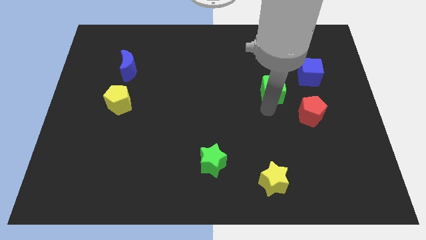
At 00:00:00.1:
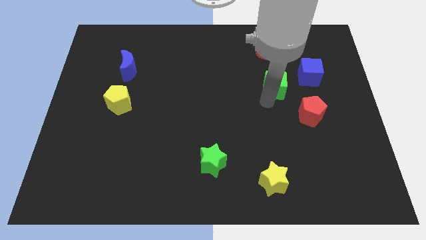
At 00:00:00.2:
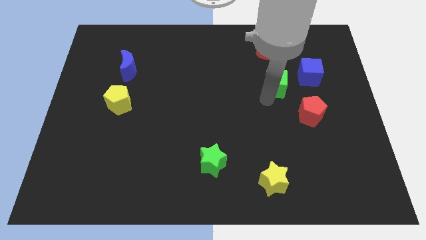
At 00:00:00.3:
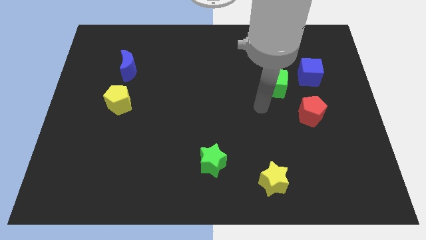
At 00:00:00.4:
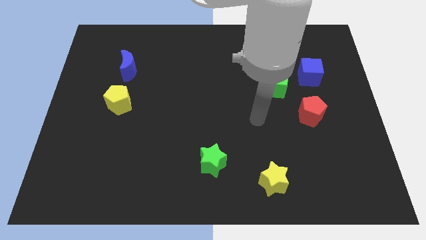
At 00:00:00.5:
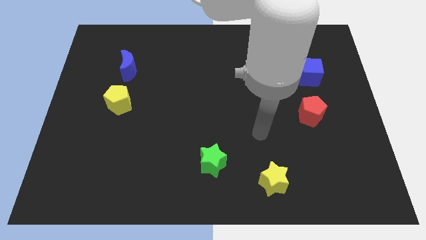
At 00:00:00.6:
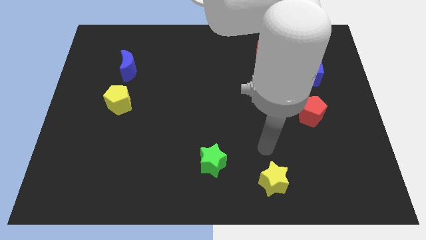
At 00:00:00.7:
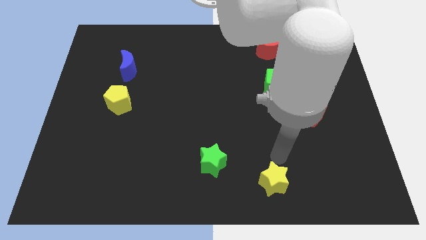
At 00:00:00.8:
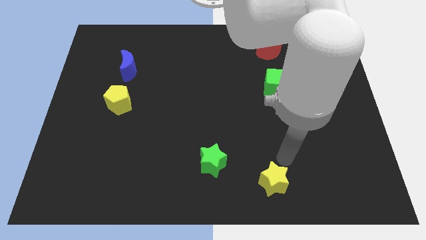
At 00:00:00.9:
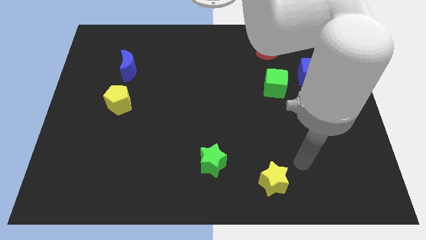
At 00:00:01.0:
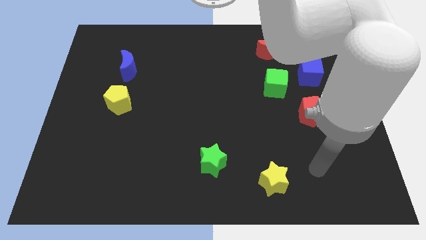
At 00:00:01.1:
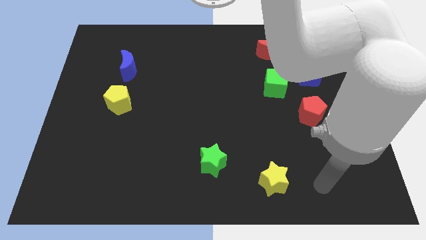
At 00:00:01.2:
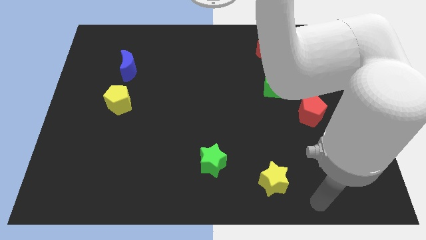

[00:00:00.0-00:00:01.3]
place the green cube to the left side of blue cube

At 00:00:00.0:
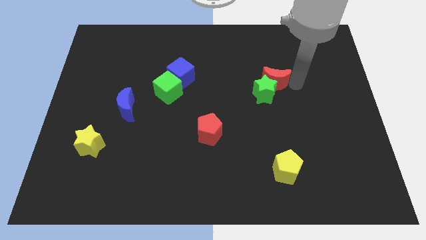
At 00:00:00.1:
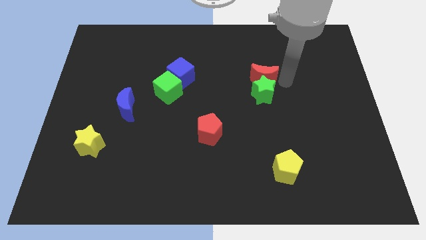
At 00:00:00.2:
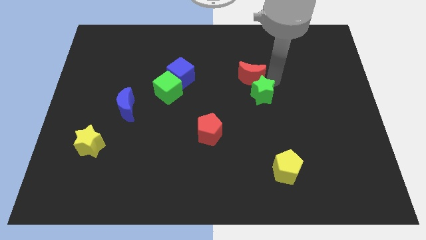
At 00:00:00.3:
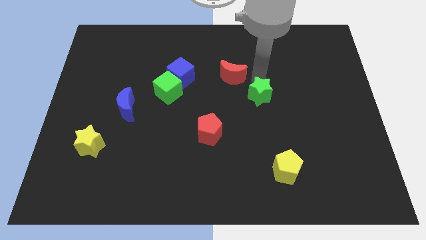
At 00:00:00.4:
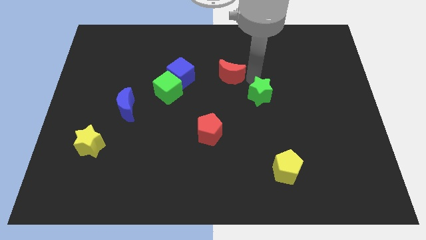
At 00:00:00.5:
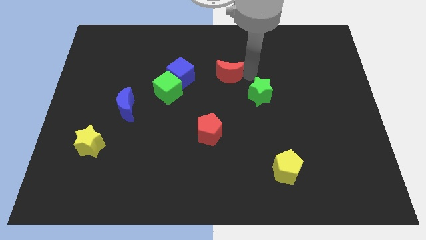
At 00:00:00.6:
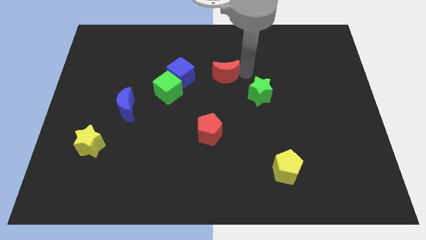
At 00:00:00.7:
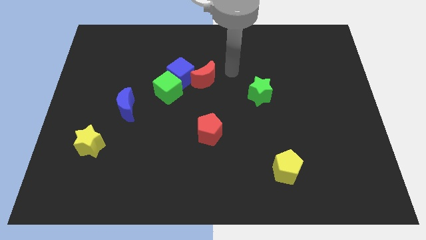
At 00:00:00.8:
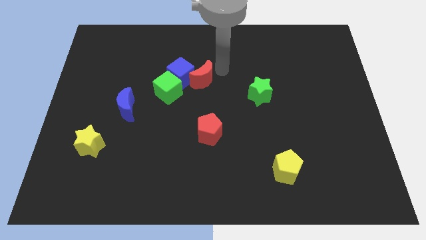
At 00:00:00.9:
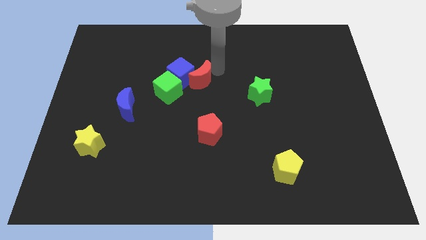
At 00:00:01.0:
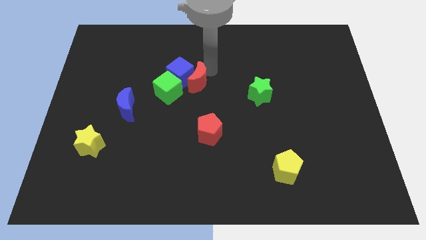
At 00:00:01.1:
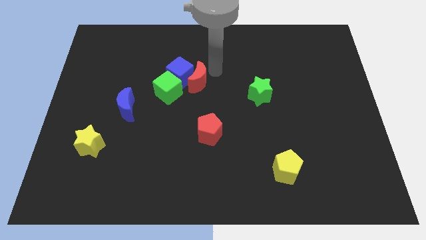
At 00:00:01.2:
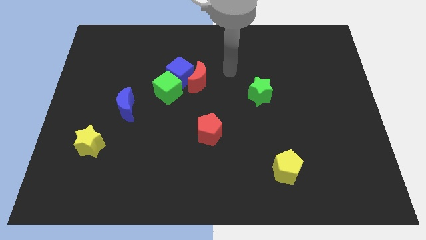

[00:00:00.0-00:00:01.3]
move the red crescent to the right of the blue cube

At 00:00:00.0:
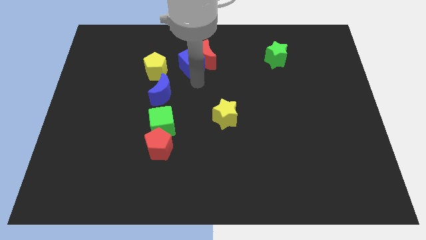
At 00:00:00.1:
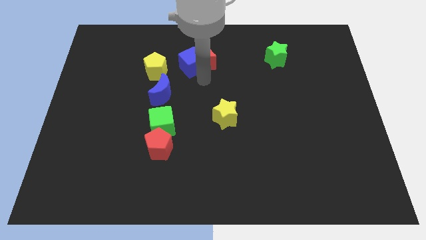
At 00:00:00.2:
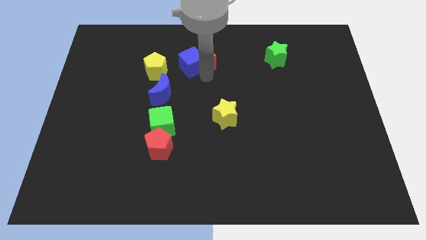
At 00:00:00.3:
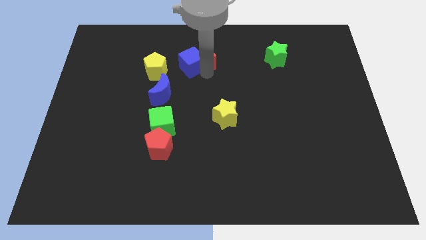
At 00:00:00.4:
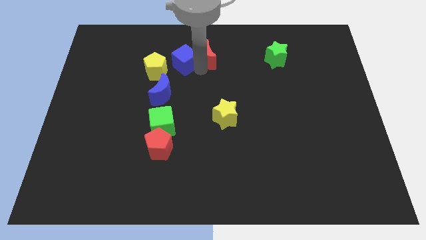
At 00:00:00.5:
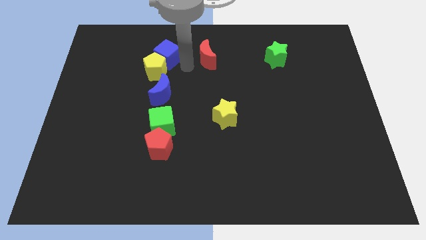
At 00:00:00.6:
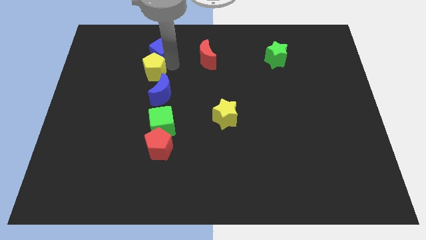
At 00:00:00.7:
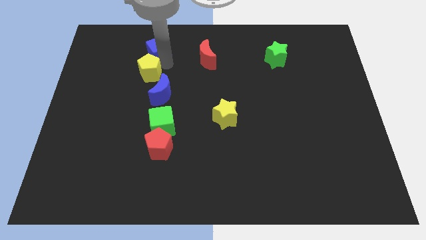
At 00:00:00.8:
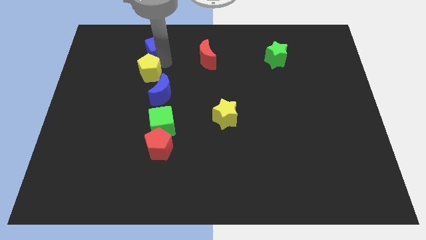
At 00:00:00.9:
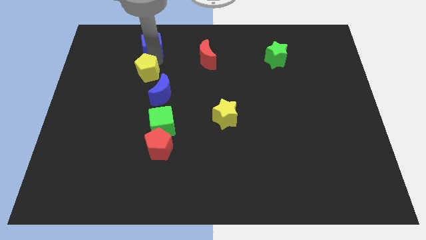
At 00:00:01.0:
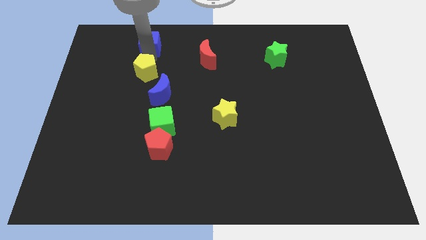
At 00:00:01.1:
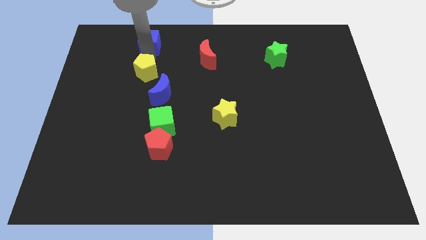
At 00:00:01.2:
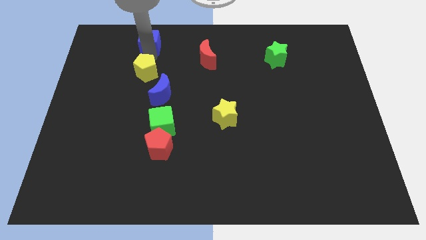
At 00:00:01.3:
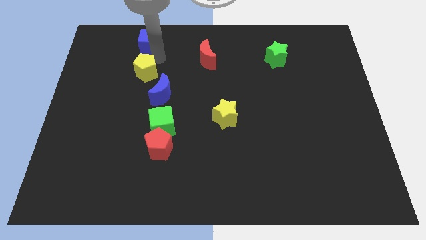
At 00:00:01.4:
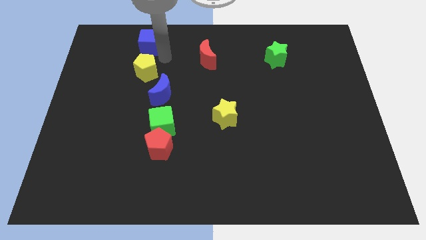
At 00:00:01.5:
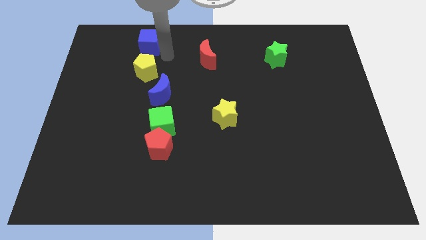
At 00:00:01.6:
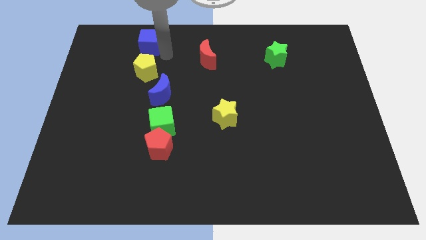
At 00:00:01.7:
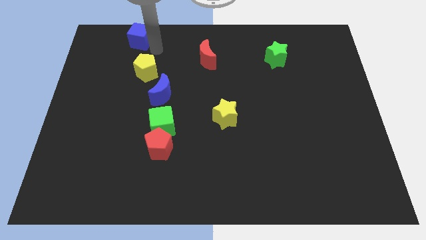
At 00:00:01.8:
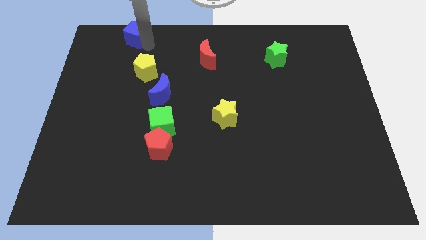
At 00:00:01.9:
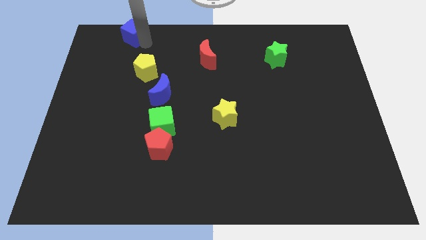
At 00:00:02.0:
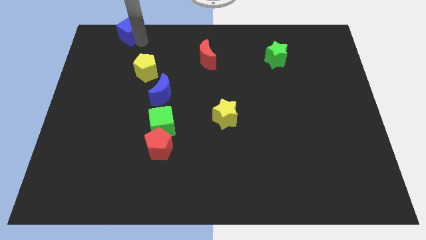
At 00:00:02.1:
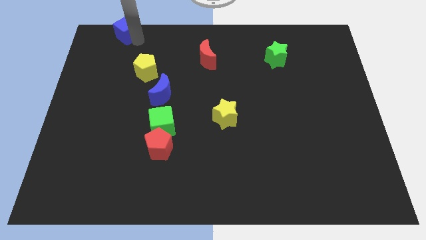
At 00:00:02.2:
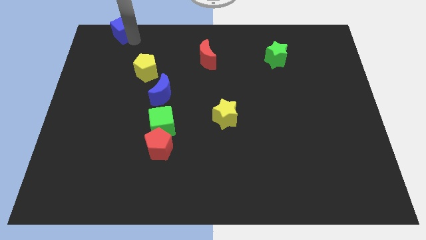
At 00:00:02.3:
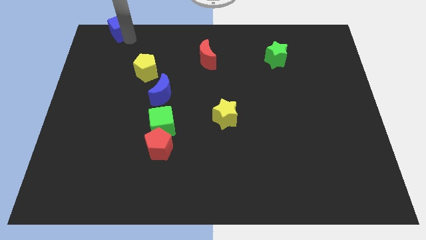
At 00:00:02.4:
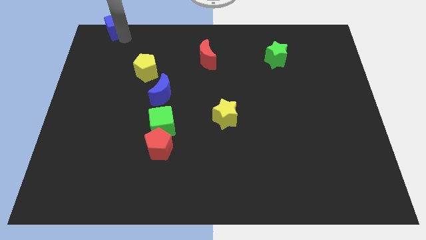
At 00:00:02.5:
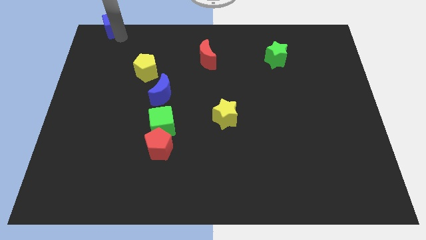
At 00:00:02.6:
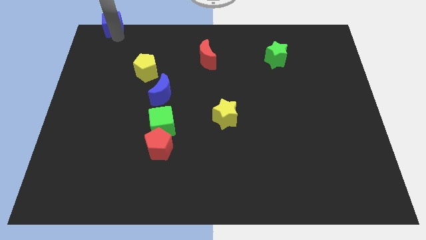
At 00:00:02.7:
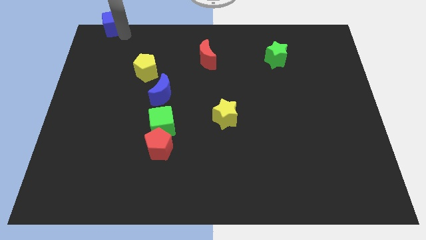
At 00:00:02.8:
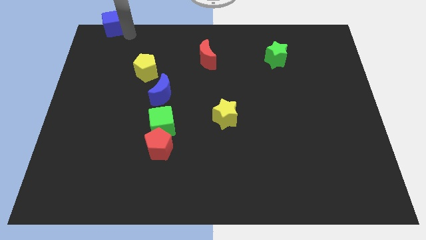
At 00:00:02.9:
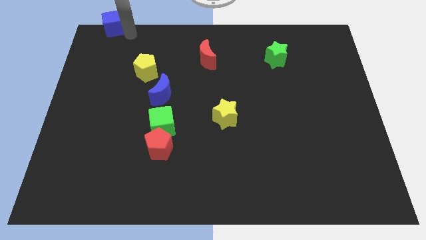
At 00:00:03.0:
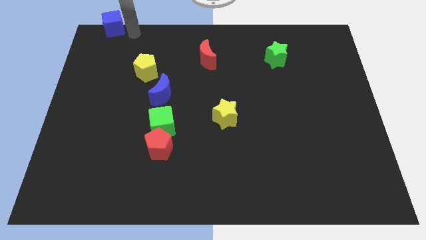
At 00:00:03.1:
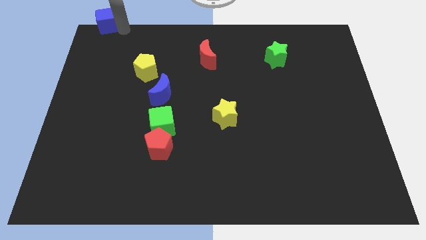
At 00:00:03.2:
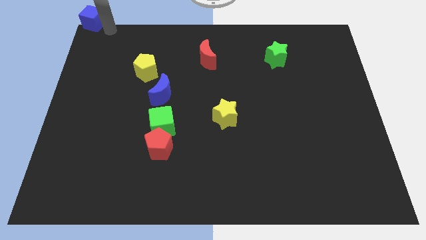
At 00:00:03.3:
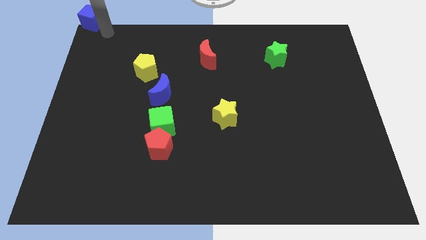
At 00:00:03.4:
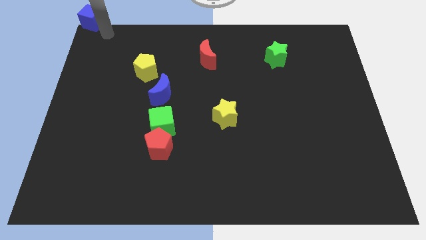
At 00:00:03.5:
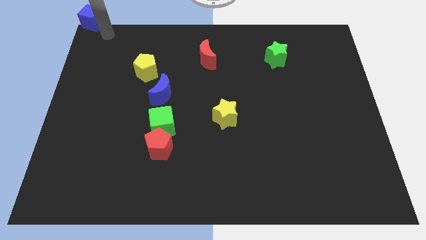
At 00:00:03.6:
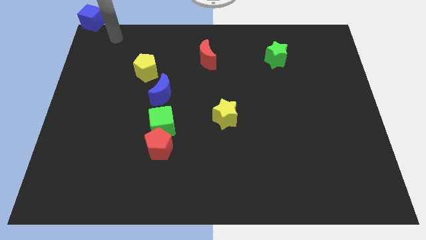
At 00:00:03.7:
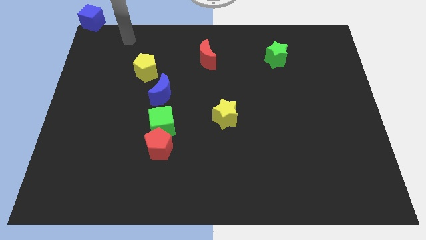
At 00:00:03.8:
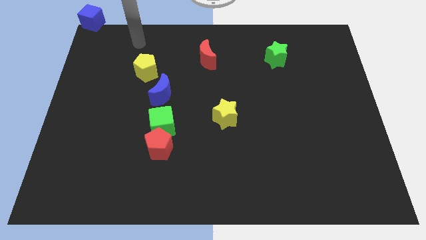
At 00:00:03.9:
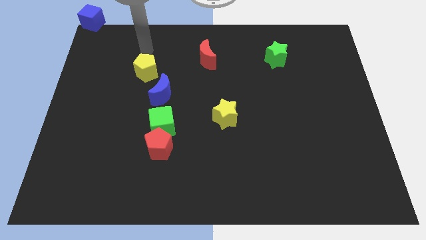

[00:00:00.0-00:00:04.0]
push the blue cube to the top left corner of the board

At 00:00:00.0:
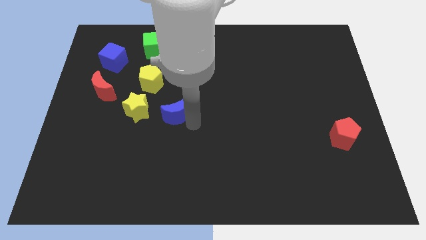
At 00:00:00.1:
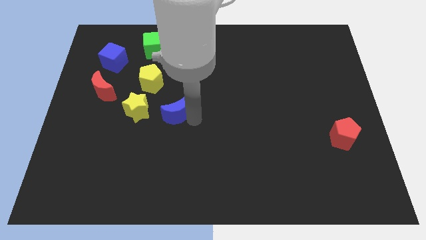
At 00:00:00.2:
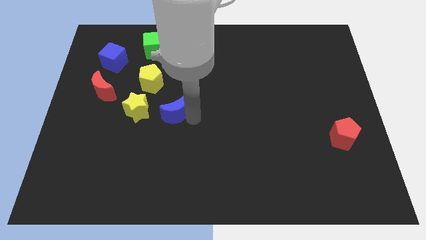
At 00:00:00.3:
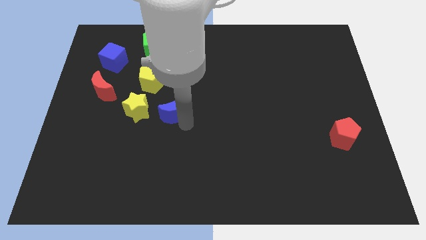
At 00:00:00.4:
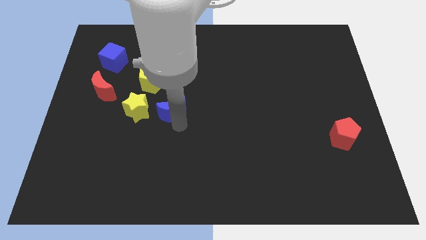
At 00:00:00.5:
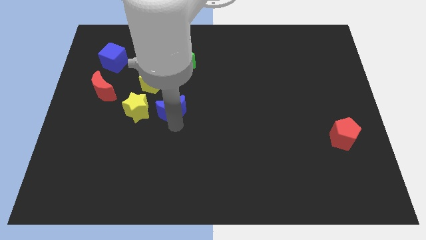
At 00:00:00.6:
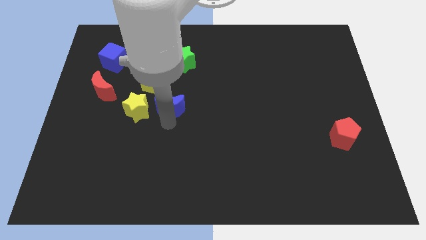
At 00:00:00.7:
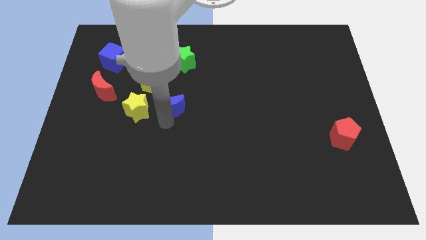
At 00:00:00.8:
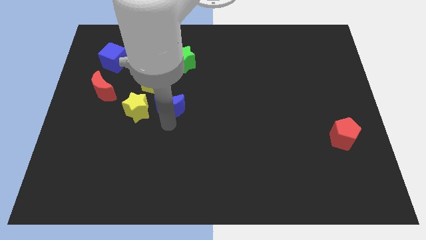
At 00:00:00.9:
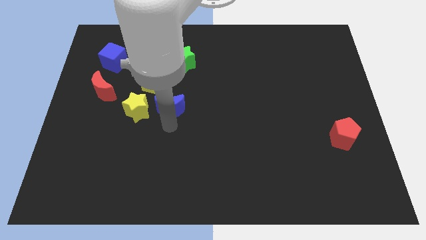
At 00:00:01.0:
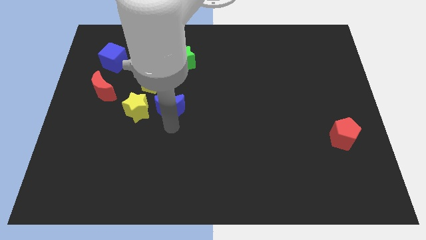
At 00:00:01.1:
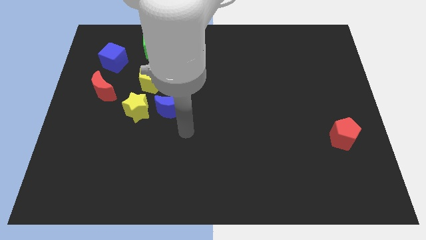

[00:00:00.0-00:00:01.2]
place blue cube on the right side of the yellow star

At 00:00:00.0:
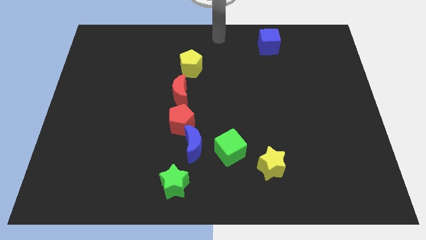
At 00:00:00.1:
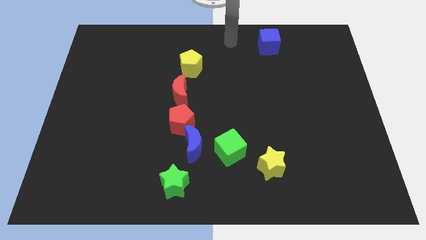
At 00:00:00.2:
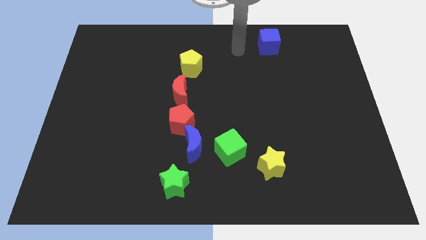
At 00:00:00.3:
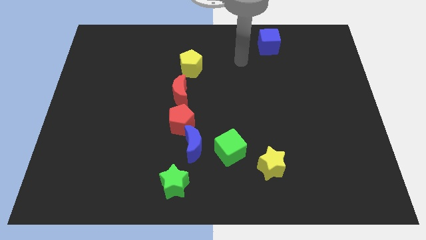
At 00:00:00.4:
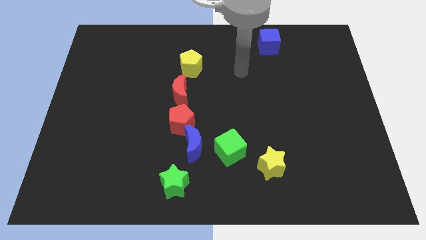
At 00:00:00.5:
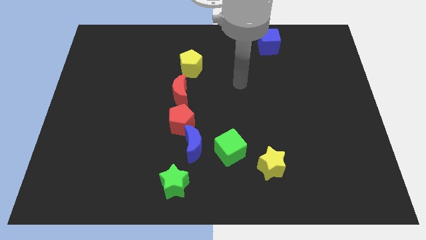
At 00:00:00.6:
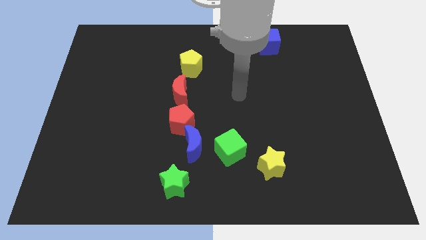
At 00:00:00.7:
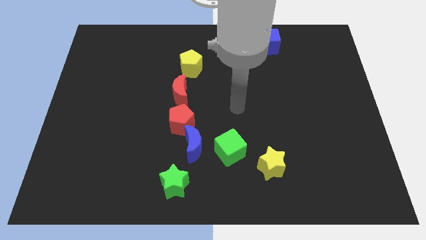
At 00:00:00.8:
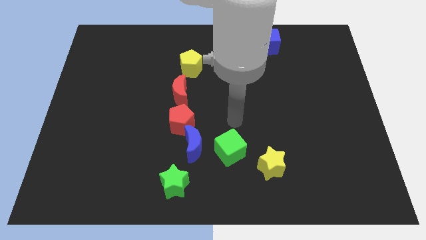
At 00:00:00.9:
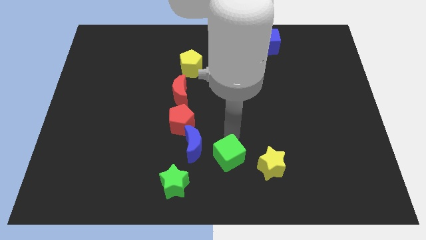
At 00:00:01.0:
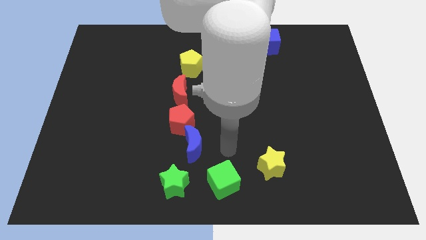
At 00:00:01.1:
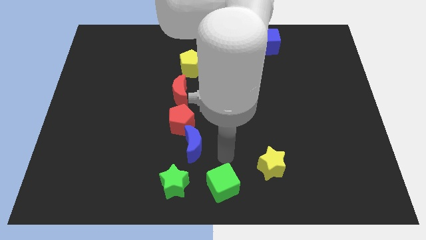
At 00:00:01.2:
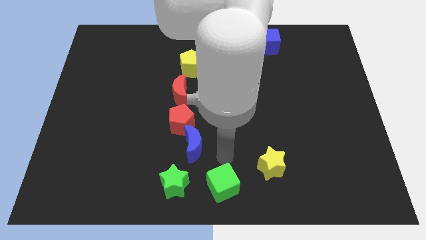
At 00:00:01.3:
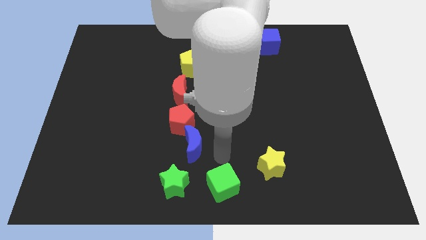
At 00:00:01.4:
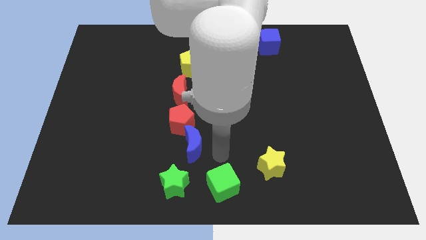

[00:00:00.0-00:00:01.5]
push the green cube to the right side of the green star
